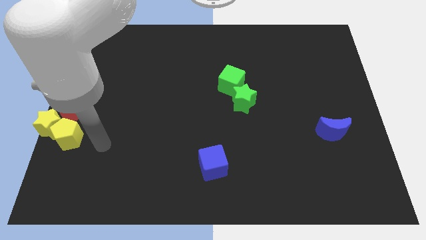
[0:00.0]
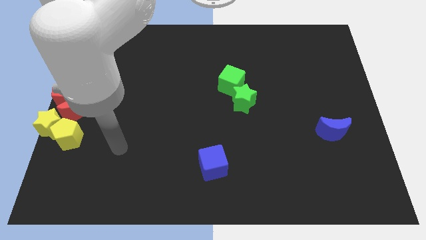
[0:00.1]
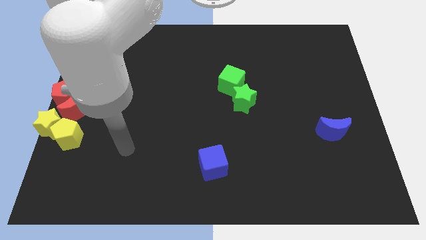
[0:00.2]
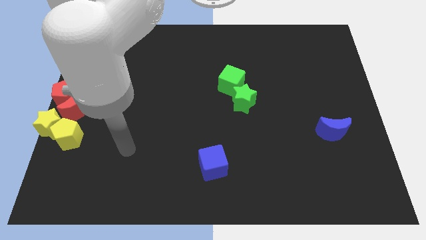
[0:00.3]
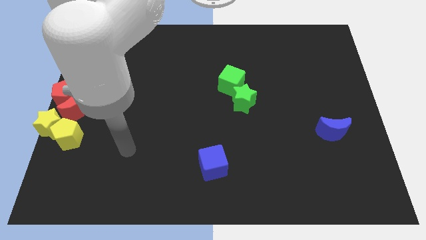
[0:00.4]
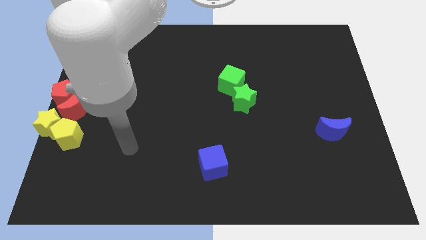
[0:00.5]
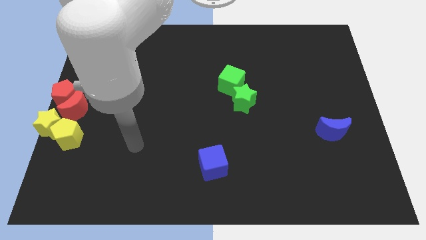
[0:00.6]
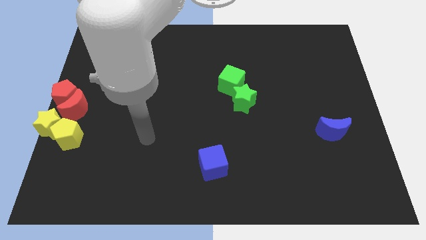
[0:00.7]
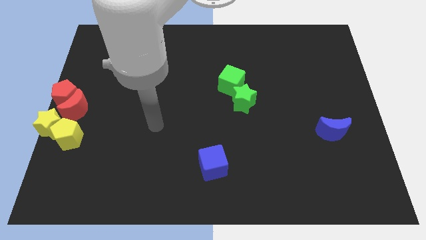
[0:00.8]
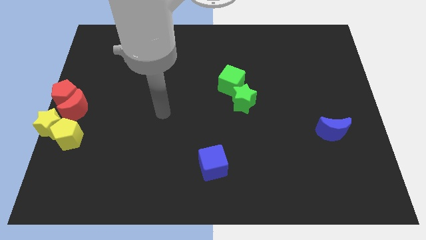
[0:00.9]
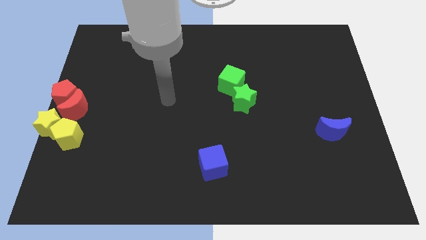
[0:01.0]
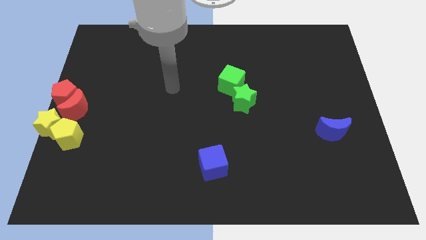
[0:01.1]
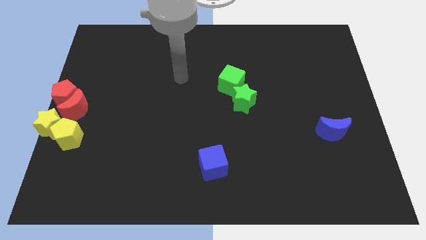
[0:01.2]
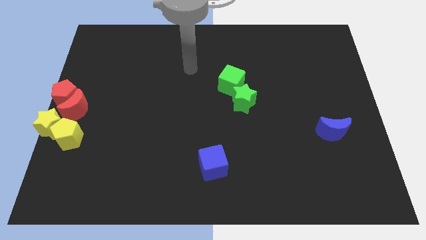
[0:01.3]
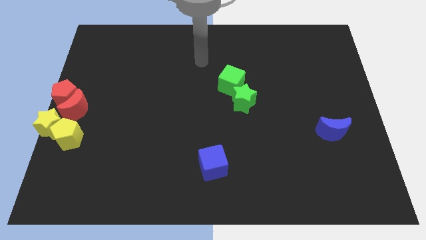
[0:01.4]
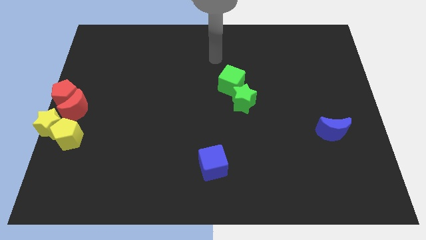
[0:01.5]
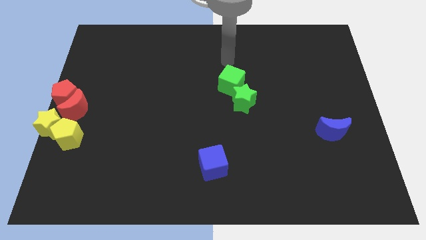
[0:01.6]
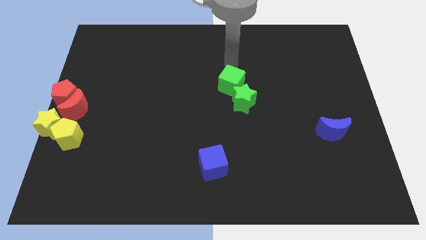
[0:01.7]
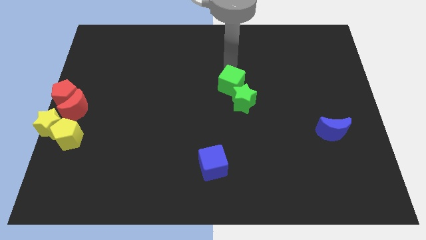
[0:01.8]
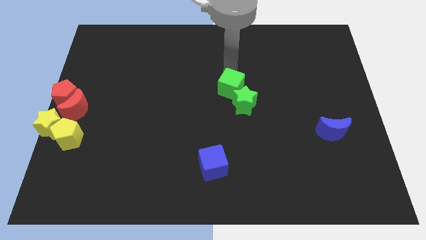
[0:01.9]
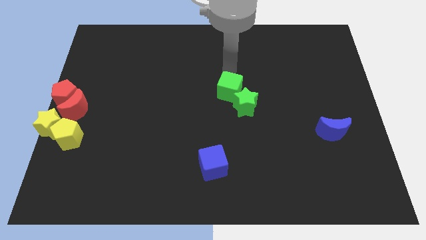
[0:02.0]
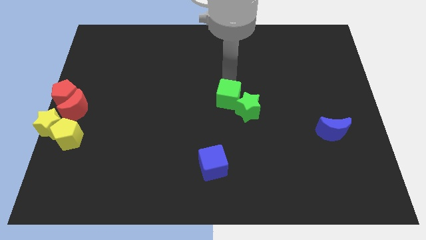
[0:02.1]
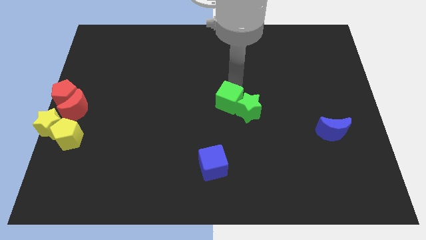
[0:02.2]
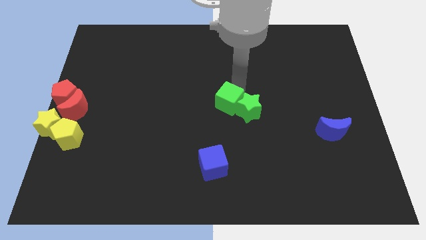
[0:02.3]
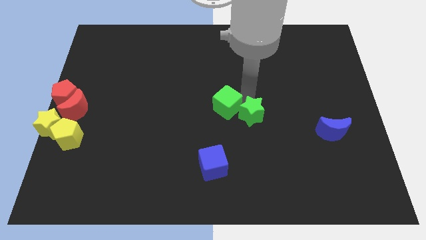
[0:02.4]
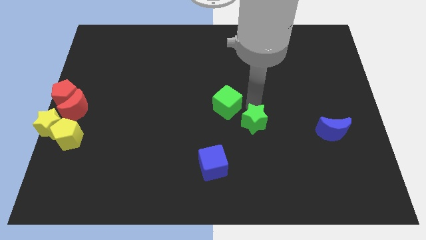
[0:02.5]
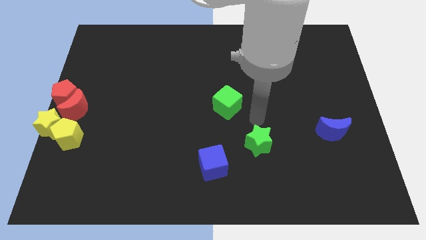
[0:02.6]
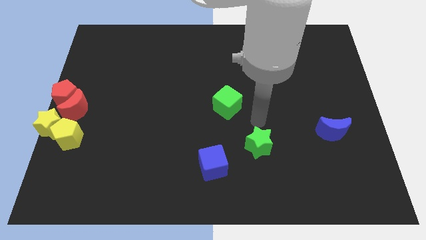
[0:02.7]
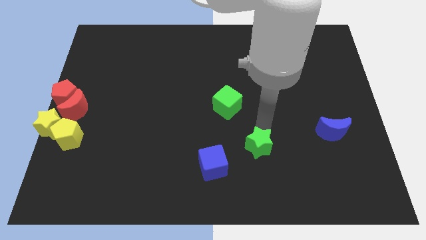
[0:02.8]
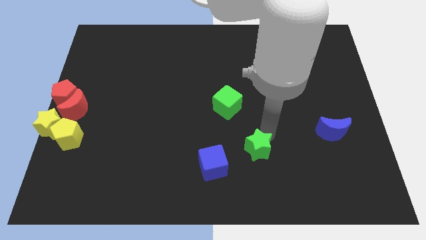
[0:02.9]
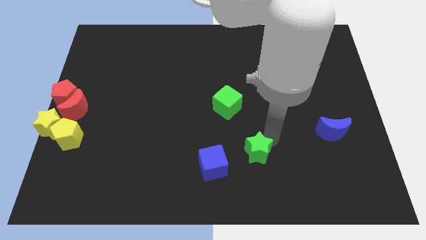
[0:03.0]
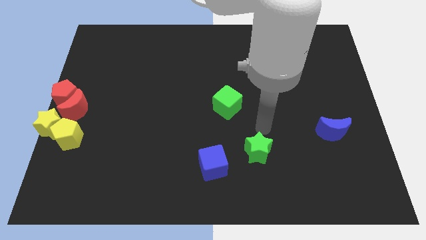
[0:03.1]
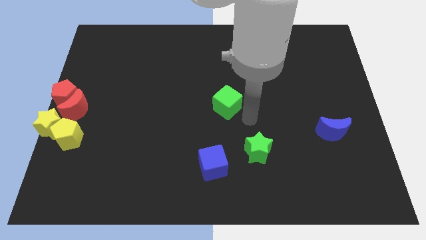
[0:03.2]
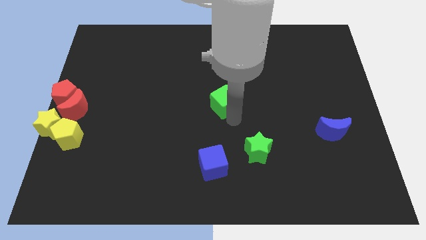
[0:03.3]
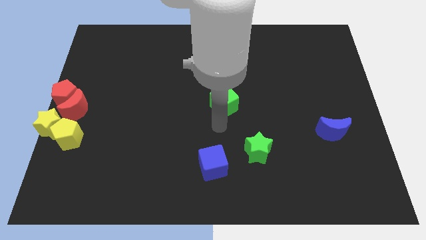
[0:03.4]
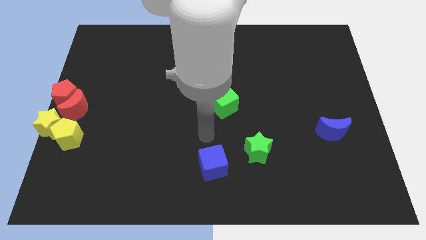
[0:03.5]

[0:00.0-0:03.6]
separate the green star from the green cube

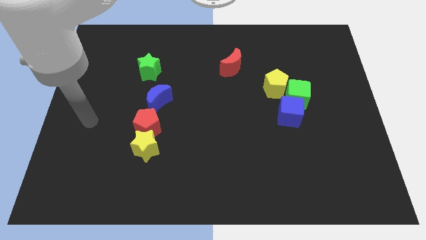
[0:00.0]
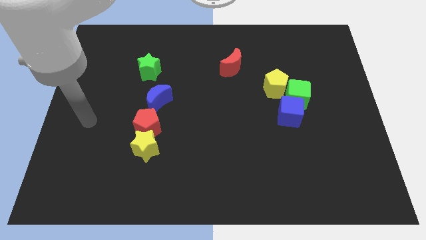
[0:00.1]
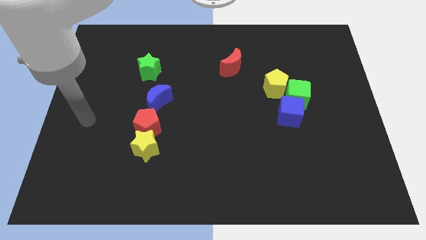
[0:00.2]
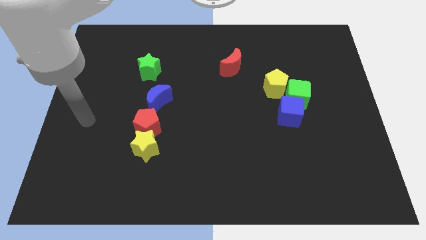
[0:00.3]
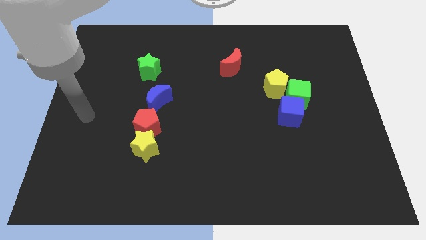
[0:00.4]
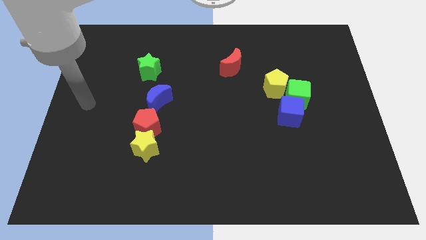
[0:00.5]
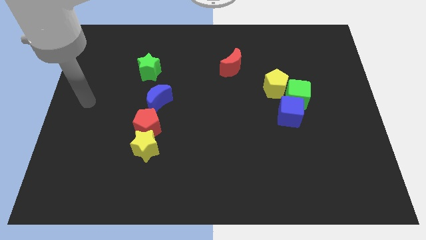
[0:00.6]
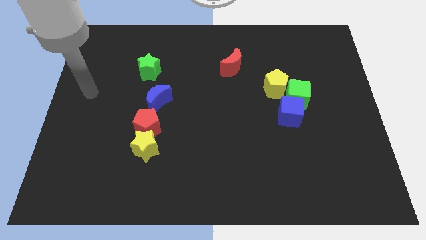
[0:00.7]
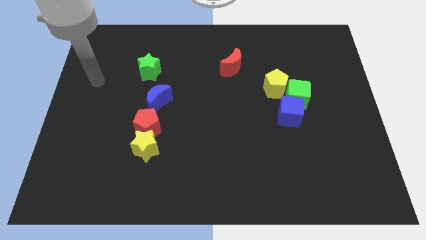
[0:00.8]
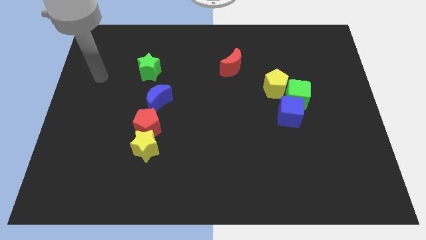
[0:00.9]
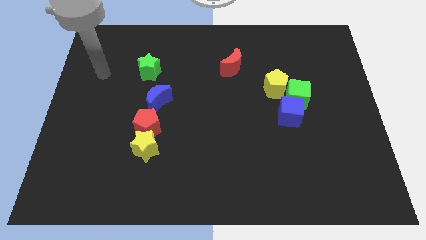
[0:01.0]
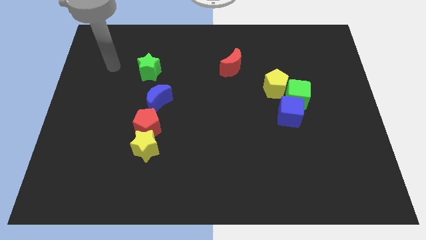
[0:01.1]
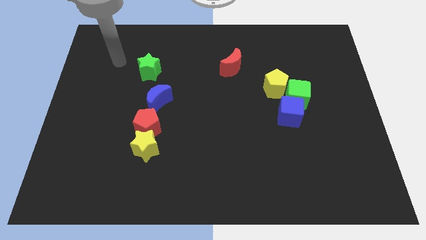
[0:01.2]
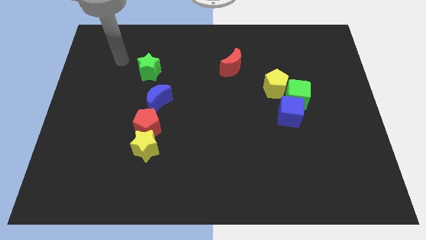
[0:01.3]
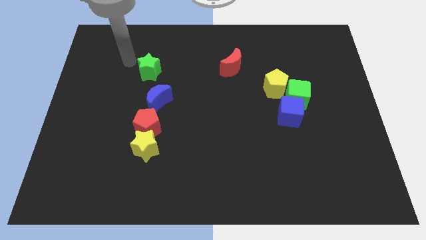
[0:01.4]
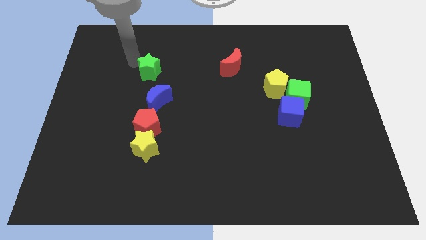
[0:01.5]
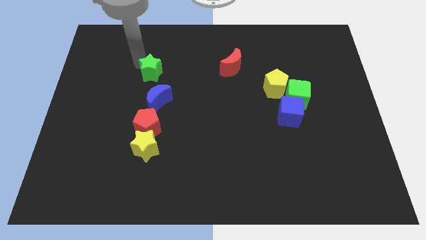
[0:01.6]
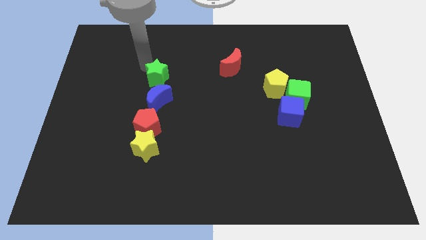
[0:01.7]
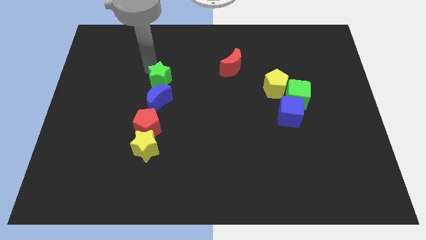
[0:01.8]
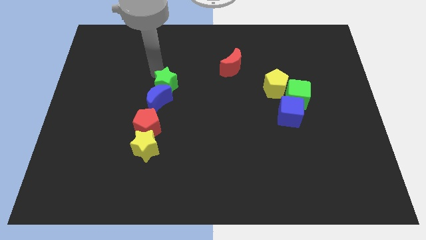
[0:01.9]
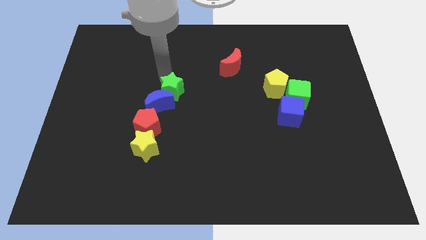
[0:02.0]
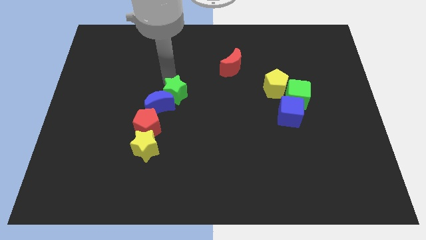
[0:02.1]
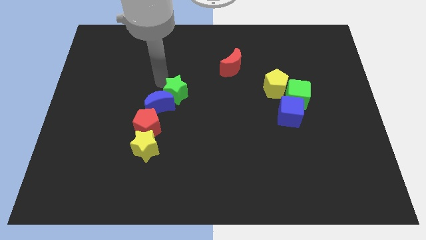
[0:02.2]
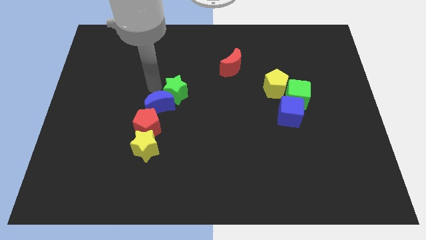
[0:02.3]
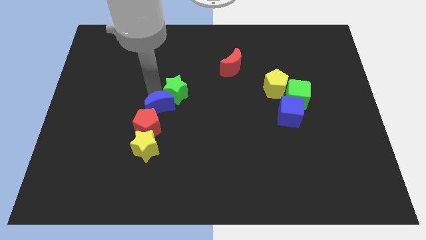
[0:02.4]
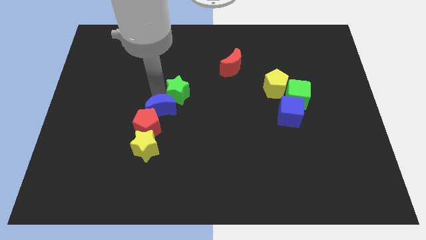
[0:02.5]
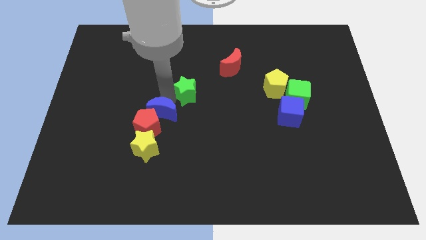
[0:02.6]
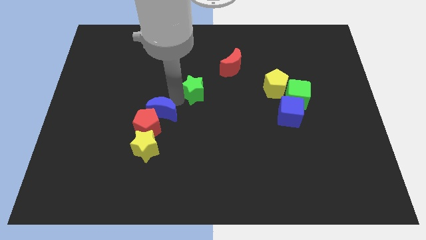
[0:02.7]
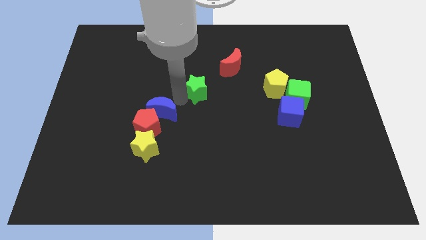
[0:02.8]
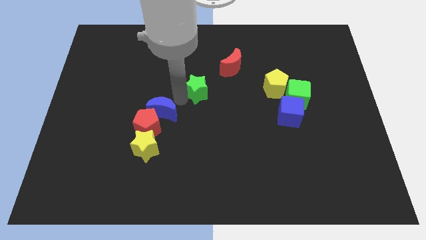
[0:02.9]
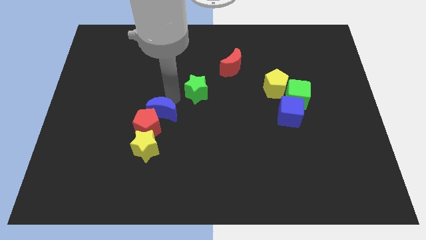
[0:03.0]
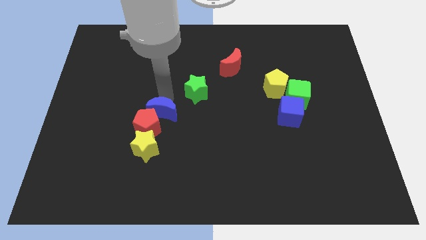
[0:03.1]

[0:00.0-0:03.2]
place the green star in between the red crescent and the blue crescent

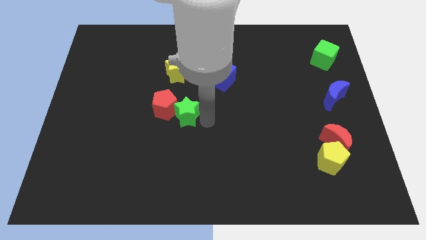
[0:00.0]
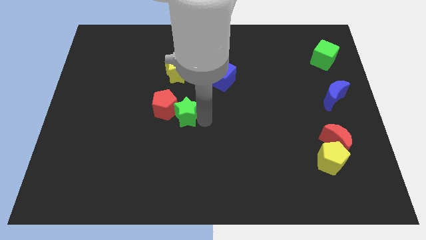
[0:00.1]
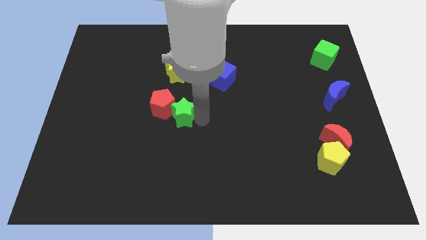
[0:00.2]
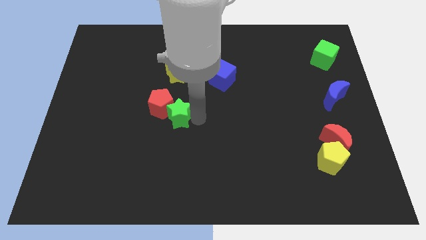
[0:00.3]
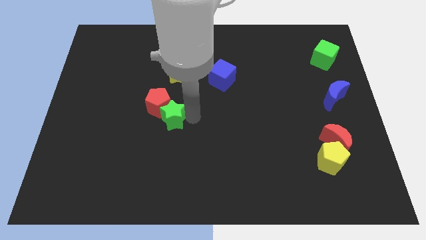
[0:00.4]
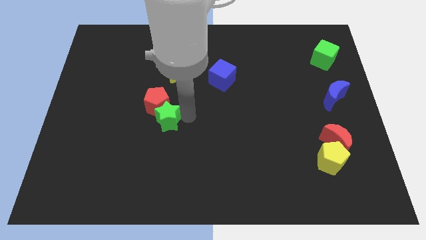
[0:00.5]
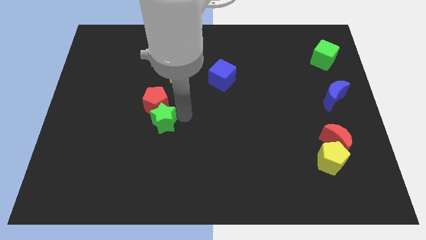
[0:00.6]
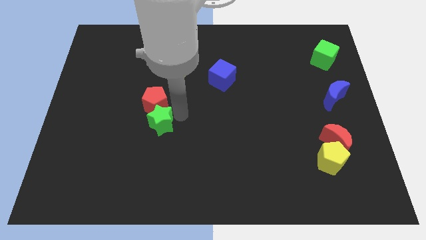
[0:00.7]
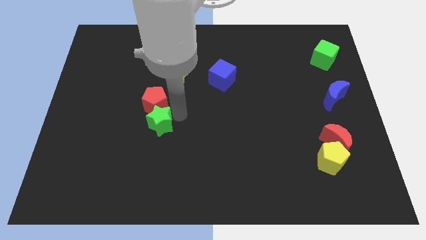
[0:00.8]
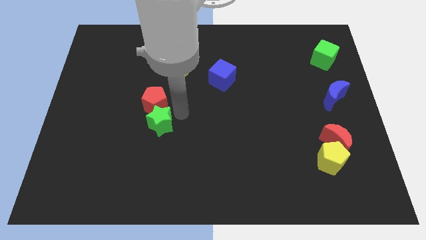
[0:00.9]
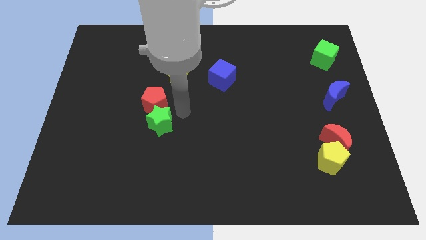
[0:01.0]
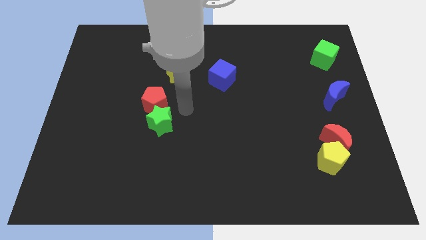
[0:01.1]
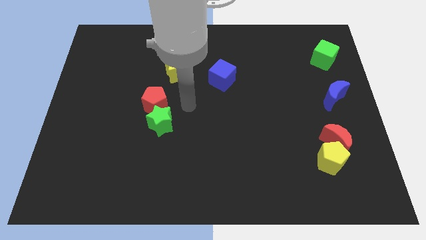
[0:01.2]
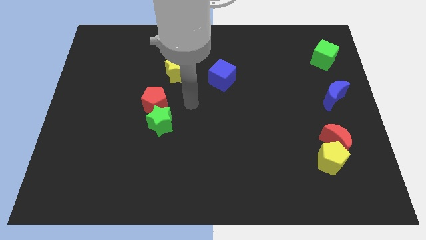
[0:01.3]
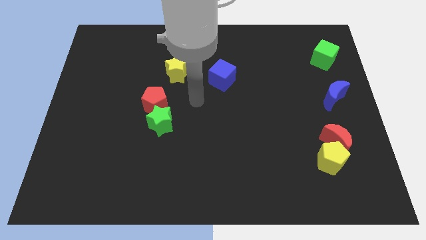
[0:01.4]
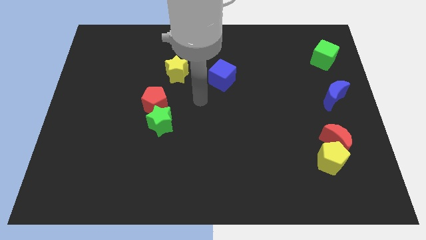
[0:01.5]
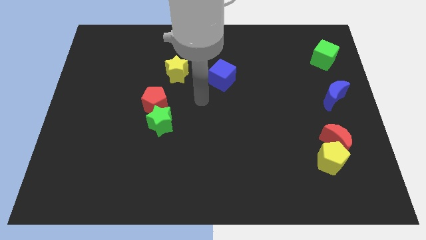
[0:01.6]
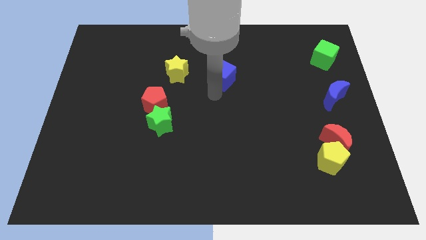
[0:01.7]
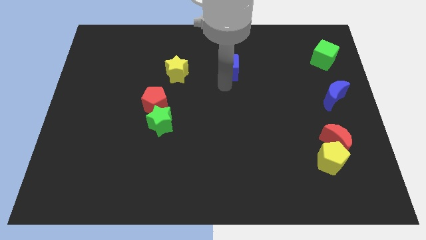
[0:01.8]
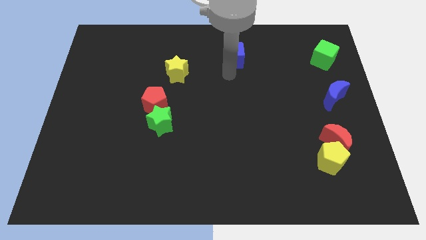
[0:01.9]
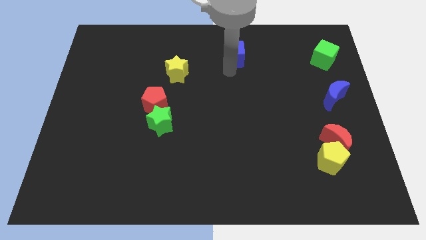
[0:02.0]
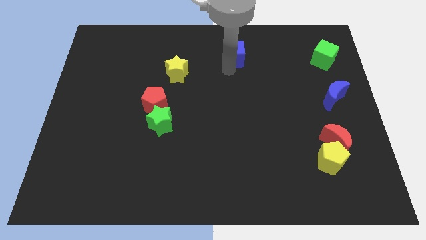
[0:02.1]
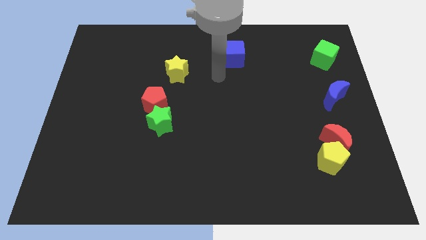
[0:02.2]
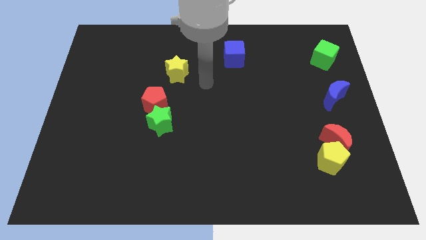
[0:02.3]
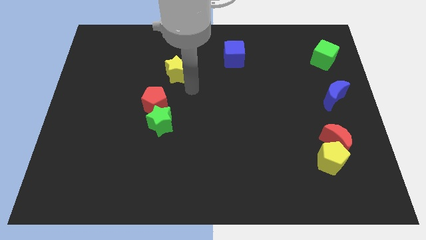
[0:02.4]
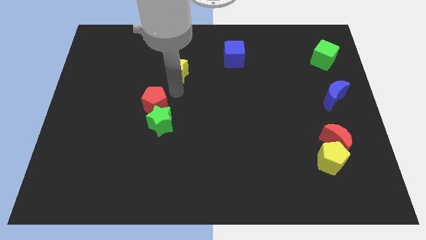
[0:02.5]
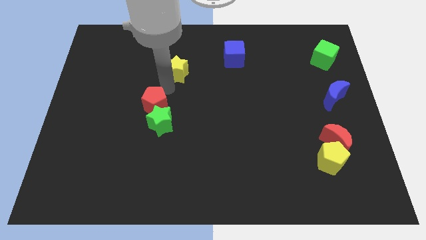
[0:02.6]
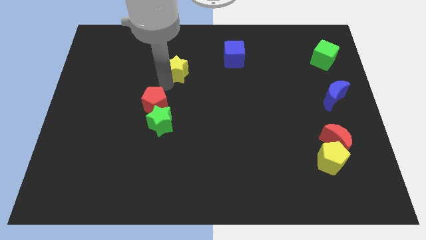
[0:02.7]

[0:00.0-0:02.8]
push the blue cube upwards
